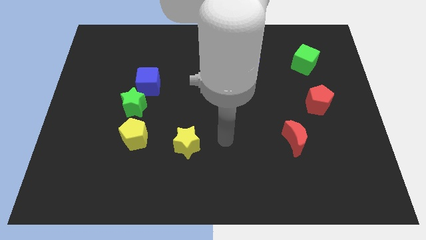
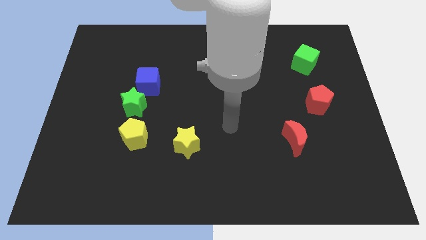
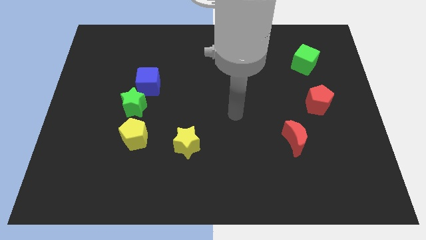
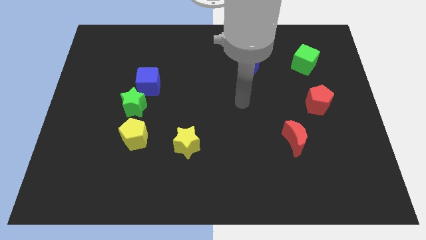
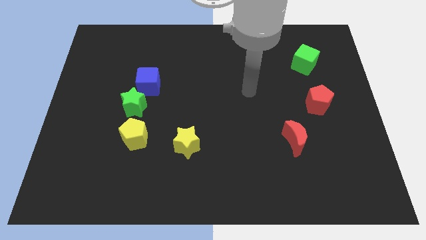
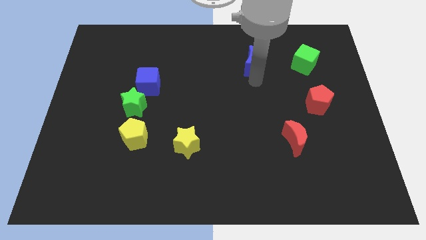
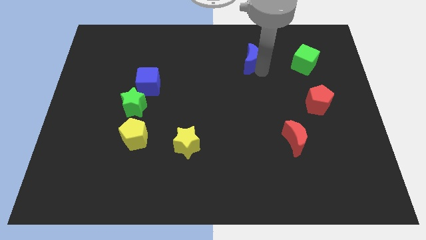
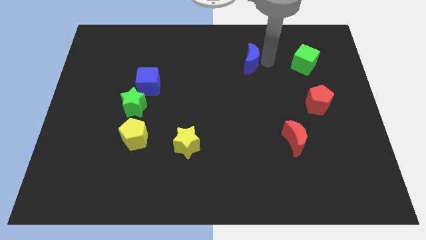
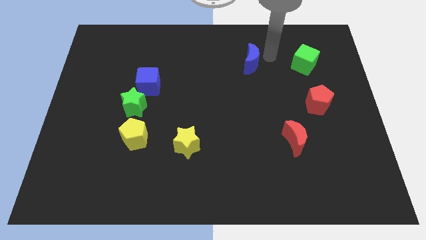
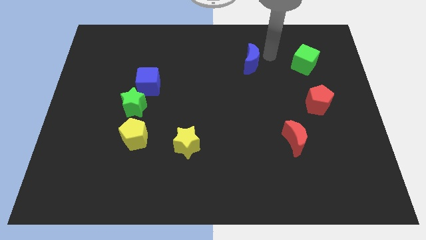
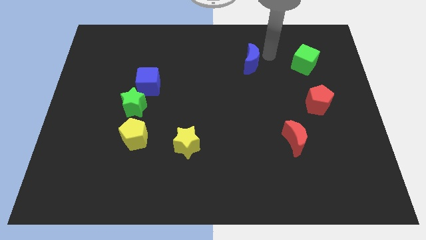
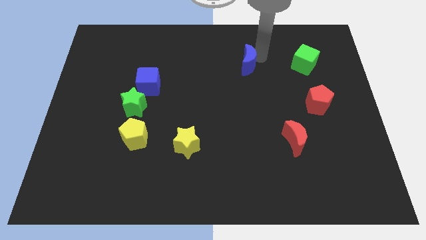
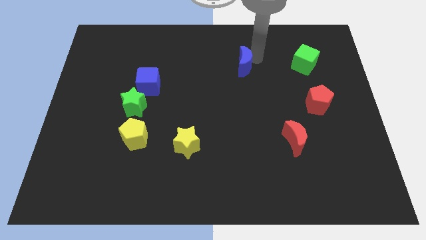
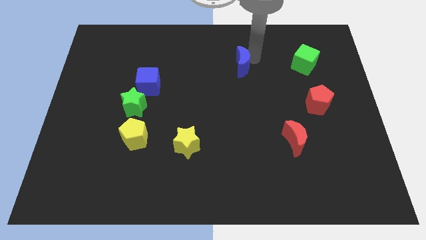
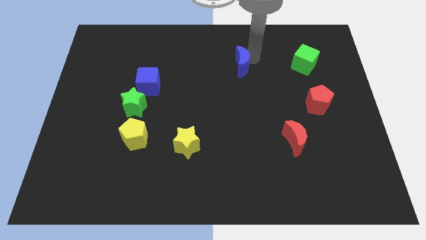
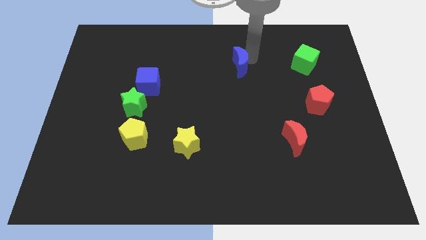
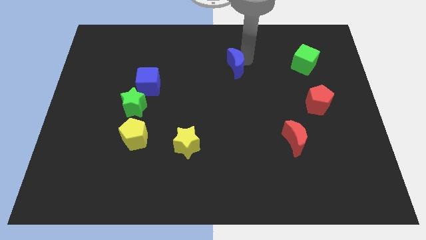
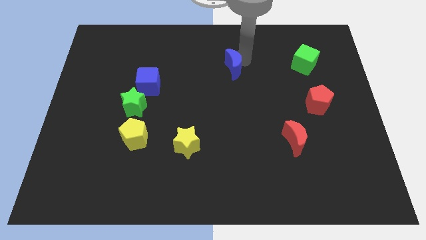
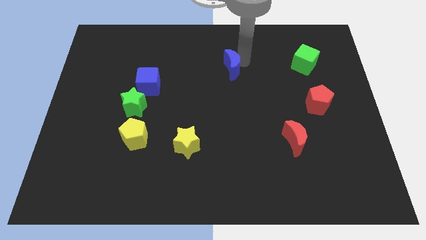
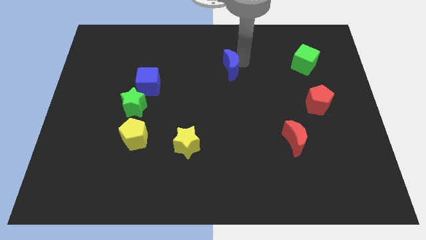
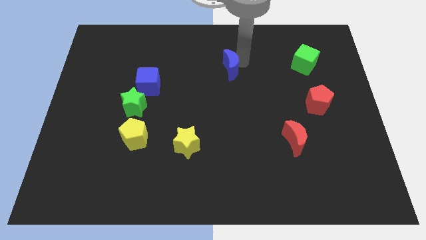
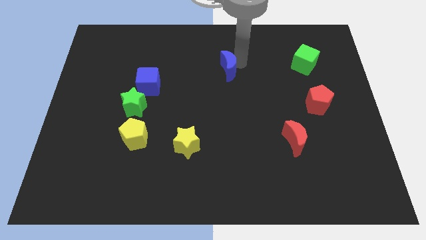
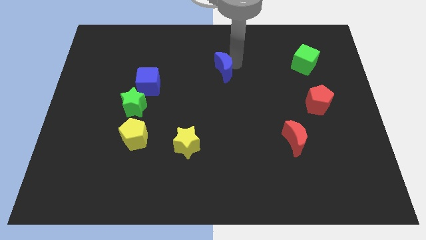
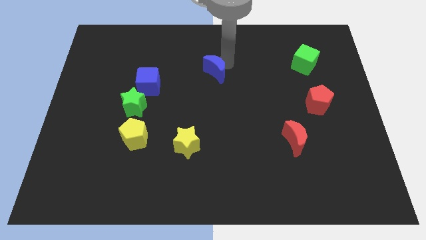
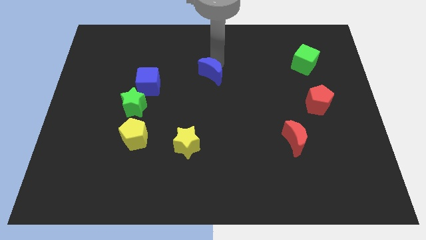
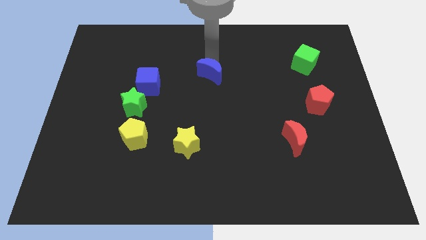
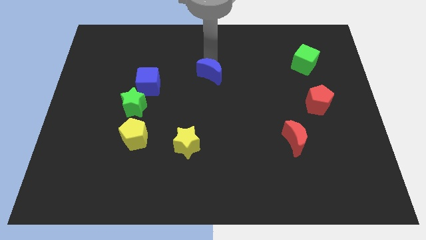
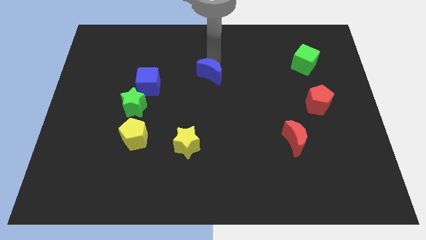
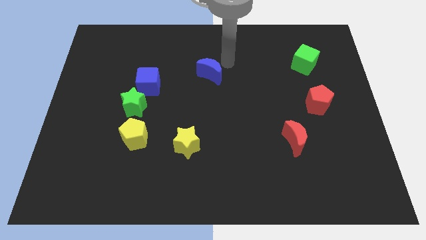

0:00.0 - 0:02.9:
push blue moon slightly to the left

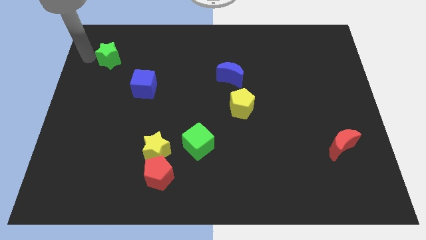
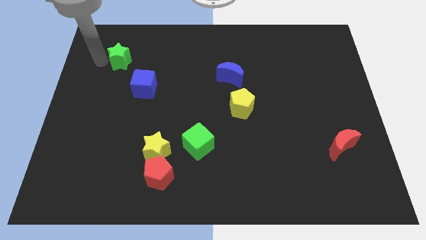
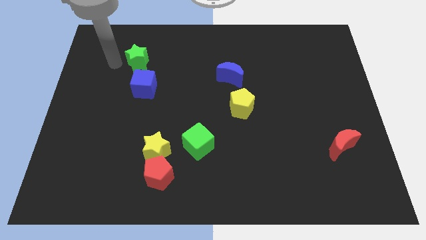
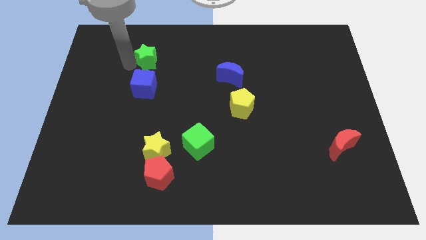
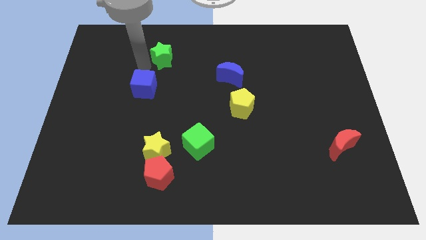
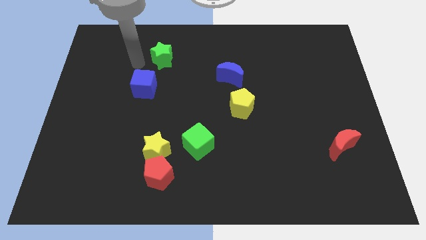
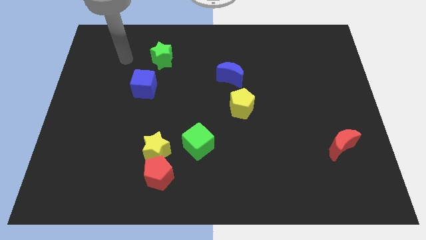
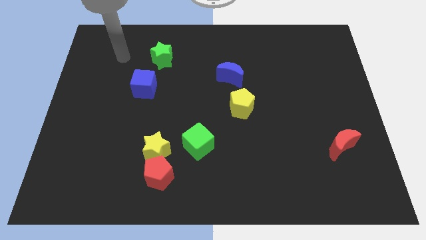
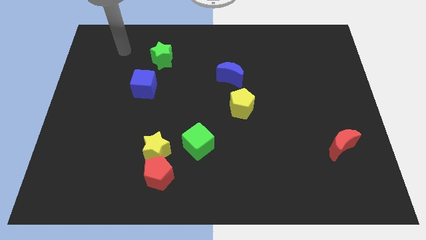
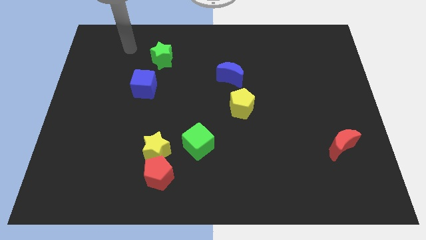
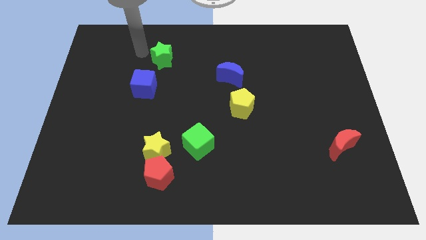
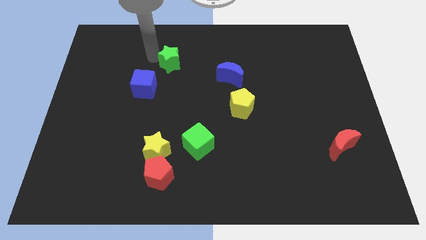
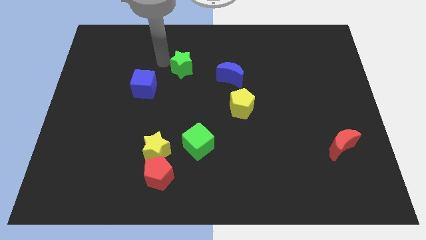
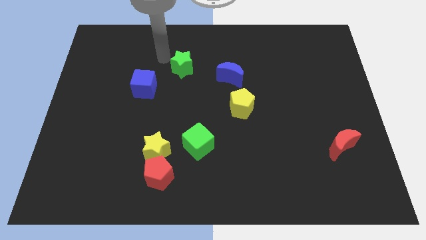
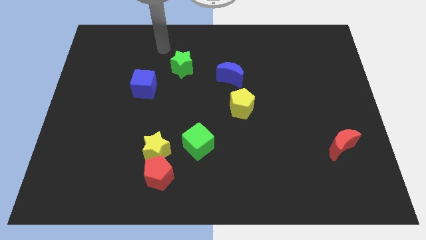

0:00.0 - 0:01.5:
drag the green star to the right

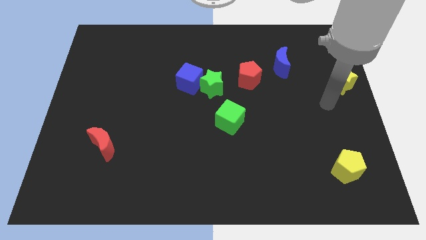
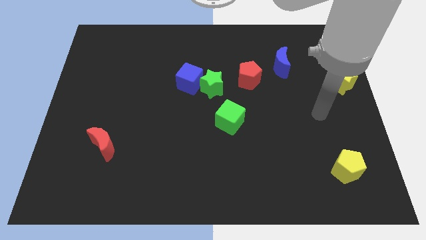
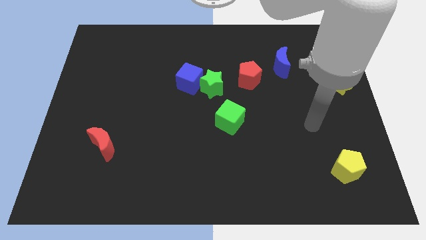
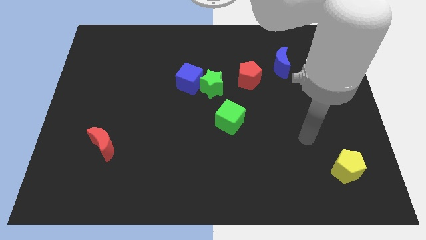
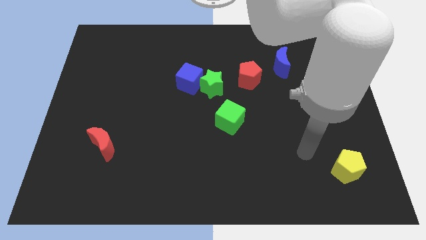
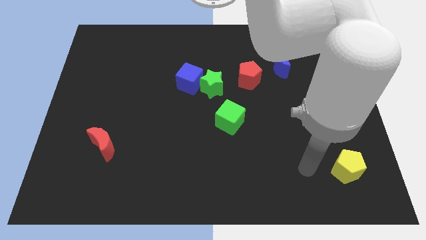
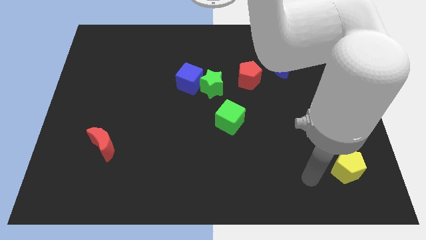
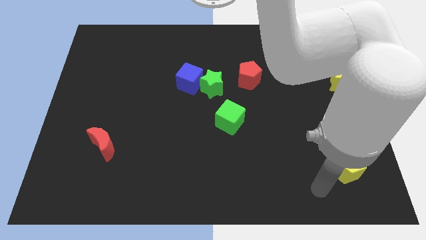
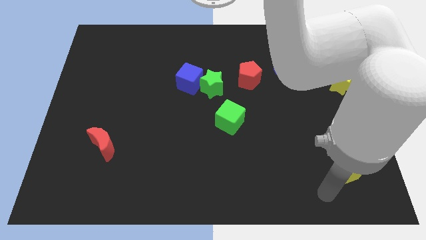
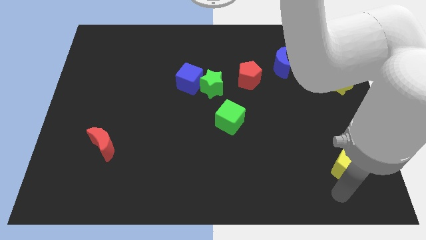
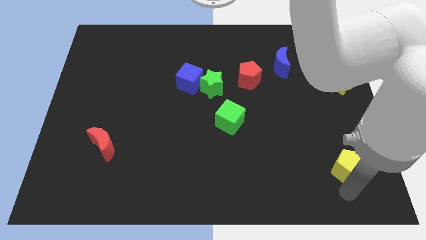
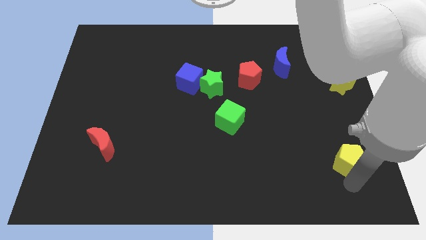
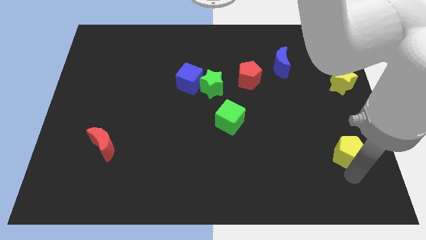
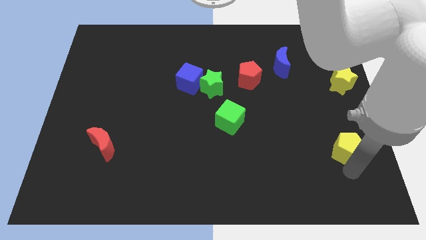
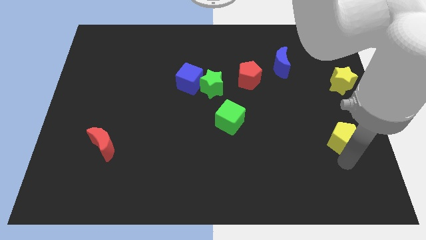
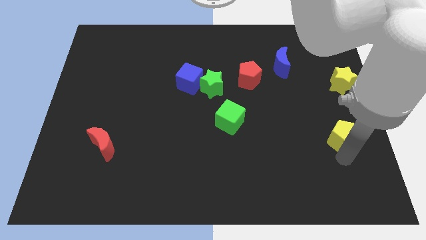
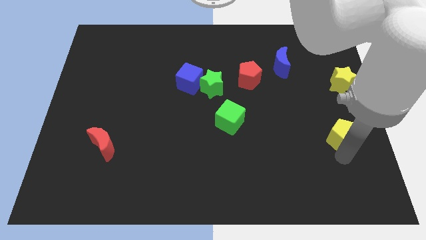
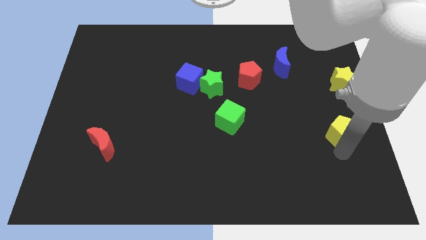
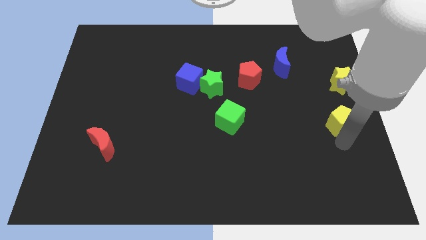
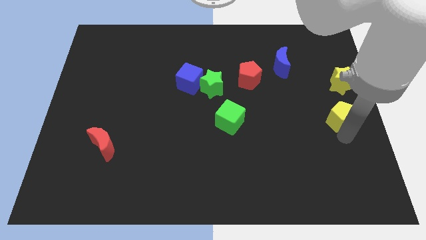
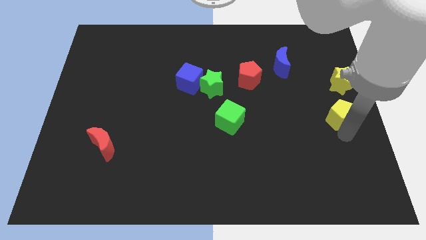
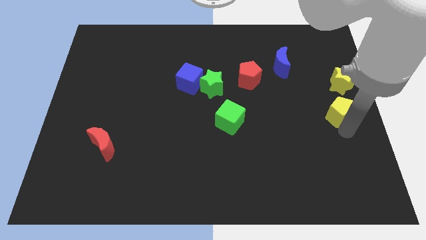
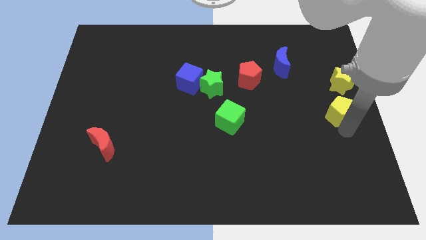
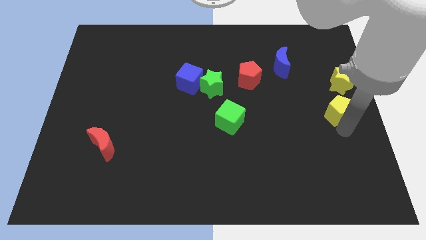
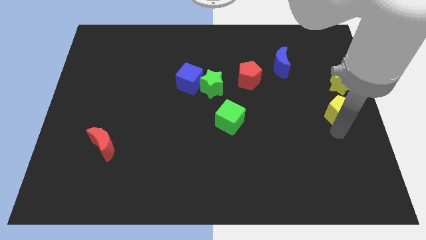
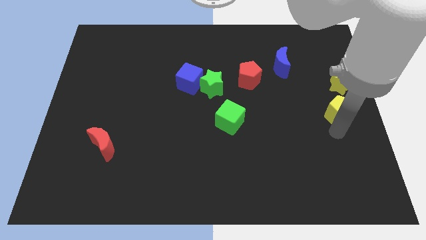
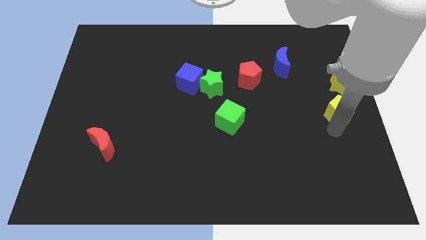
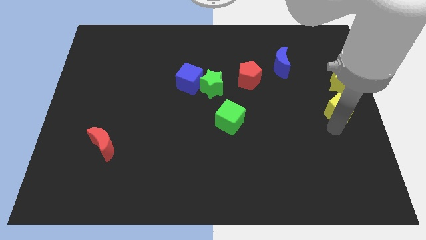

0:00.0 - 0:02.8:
push the yellow pentagon to the right of the green cube

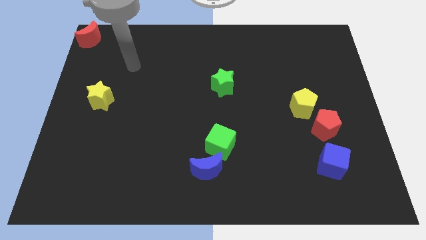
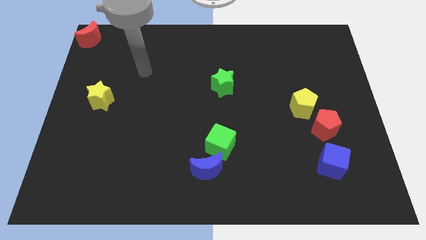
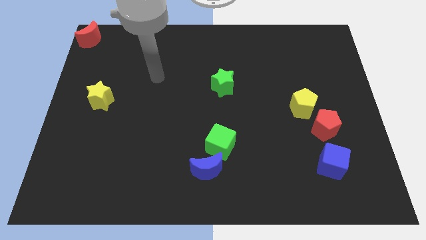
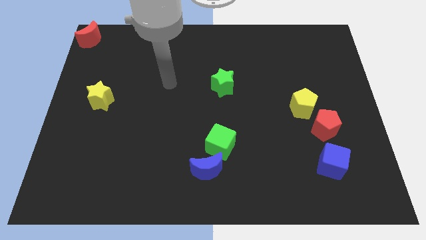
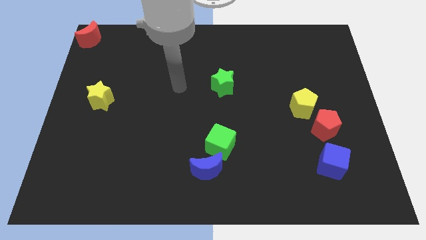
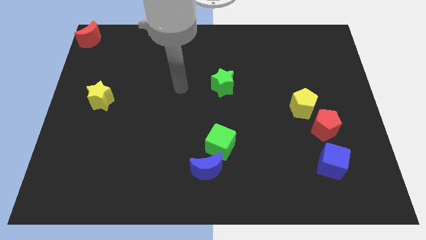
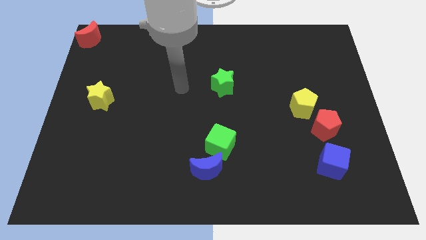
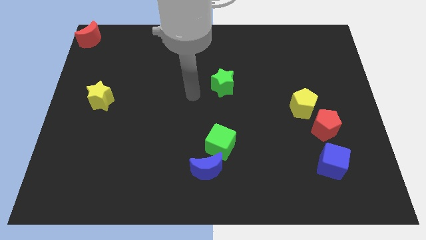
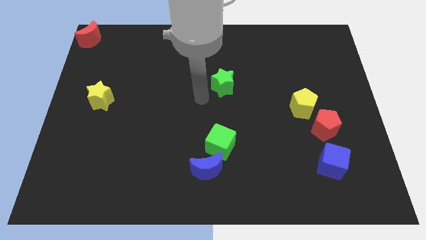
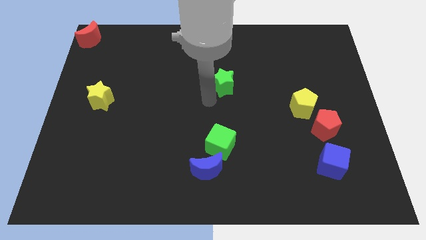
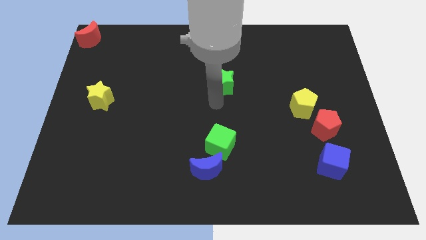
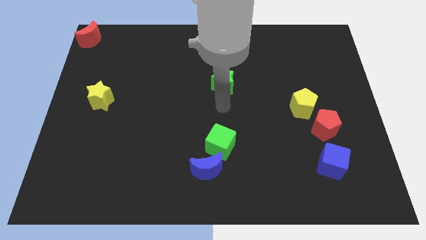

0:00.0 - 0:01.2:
place your arm to the bottom of green star

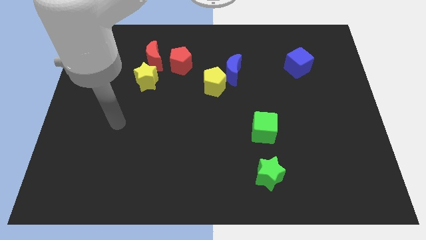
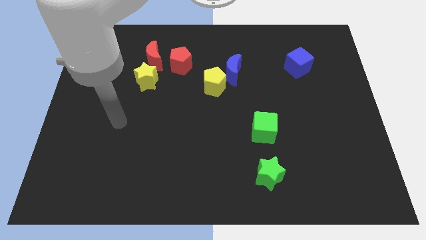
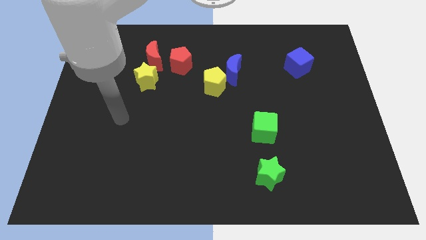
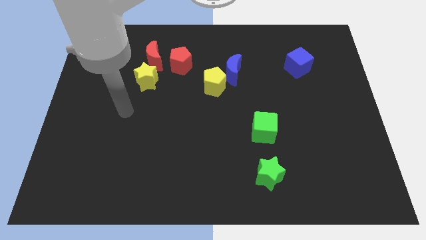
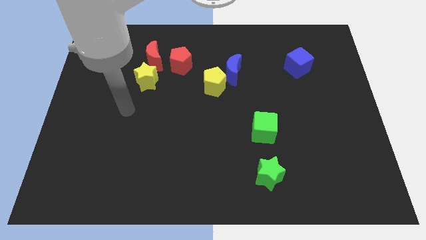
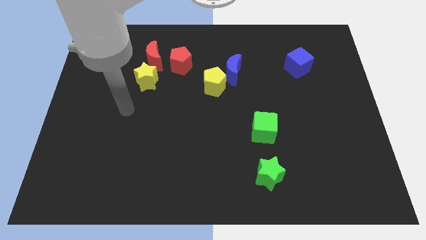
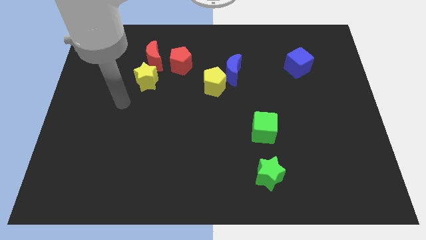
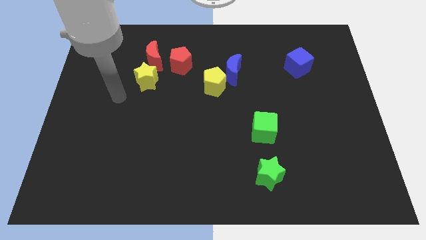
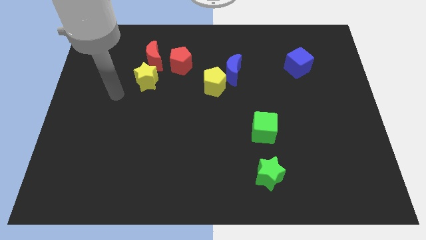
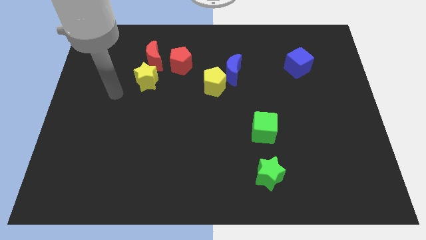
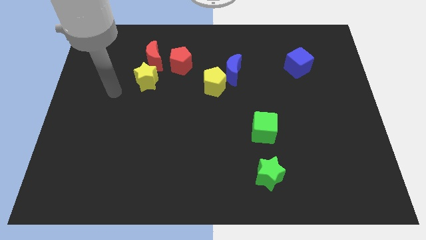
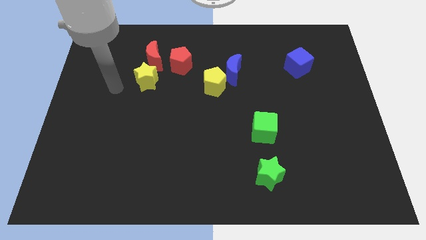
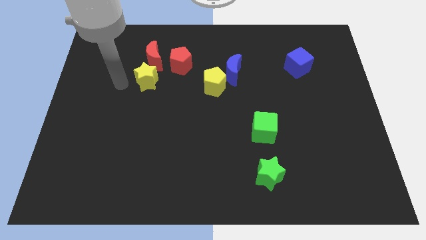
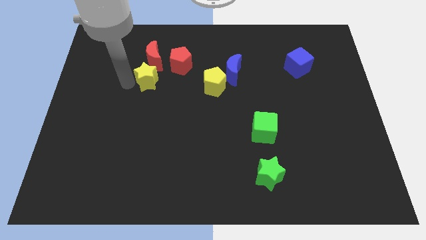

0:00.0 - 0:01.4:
place arm to the left of the yellow star
